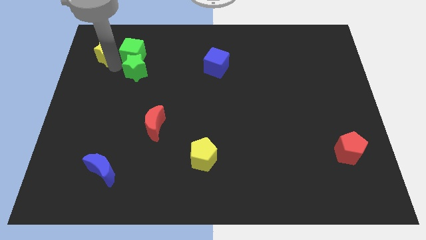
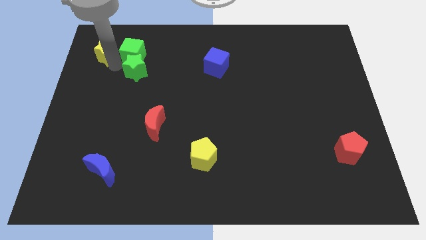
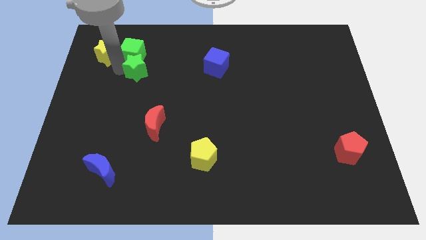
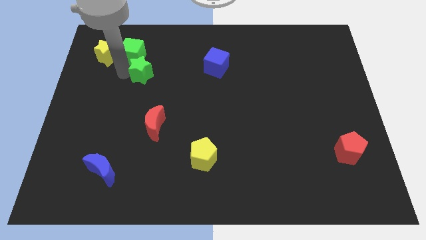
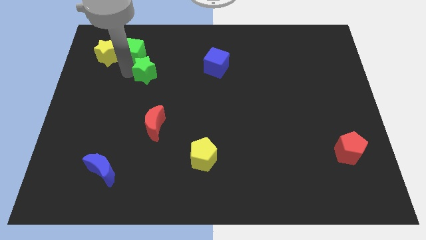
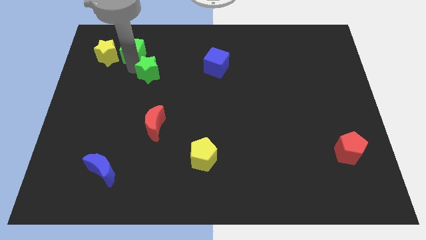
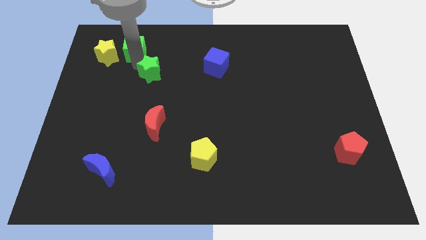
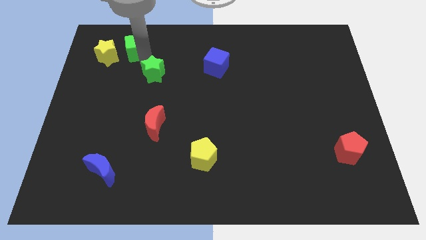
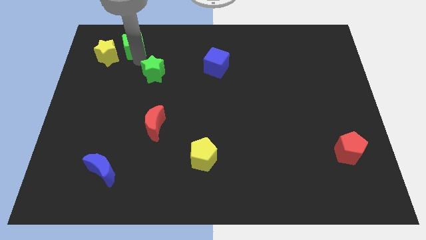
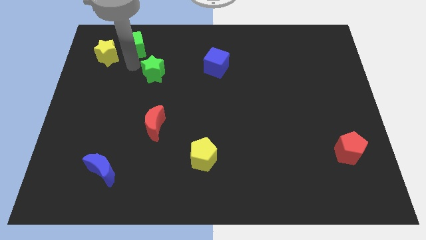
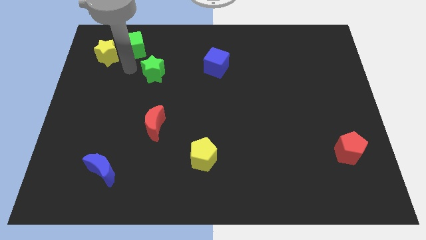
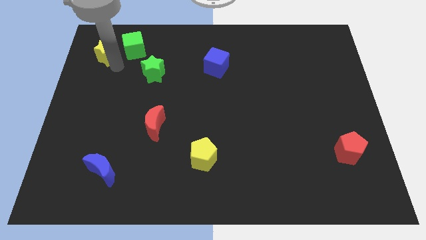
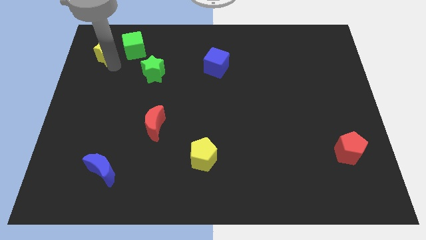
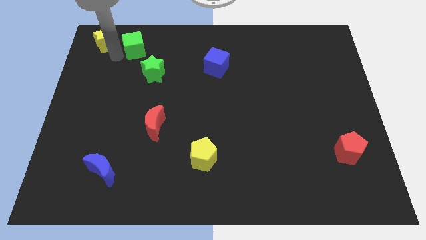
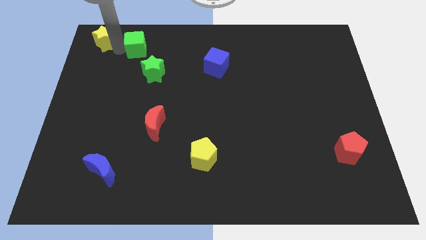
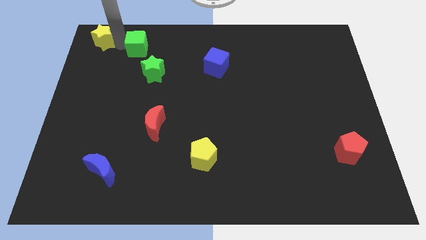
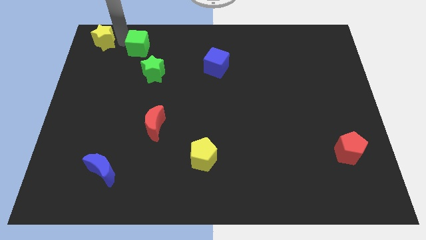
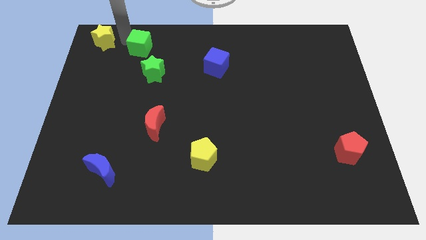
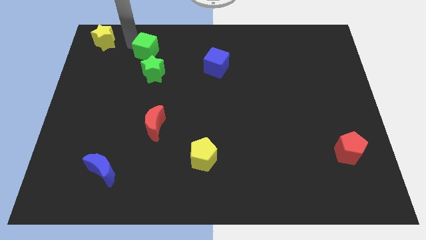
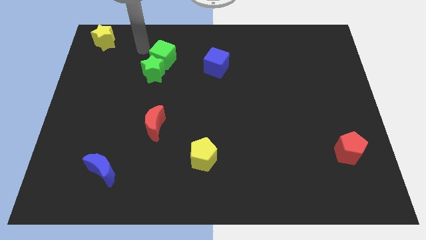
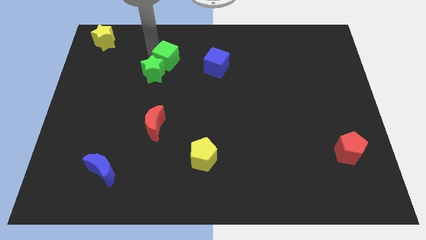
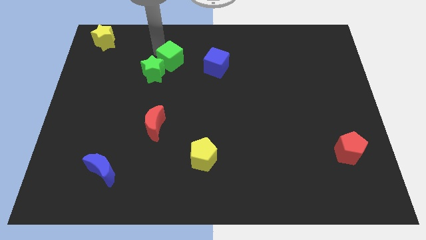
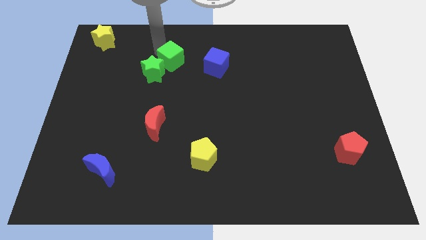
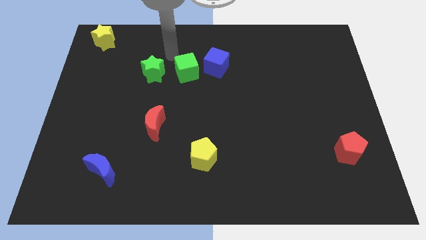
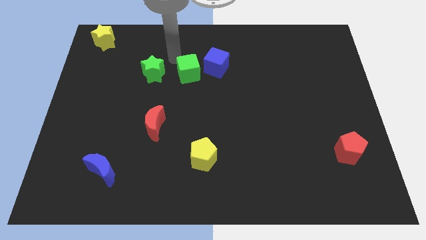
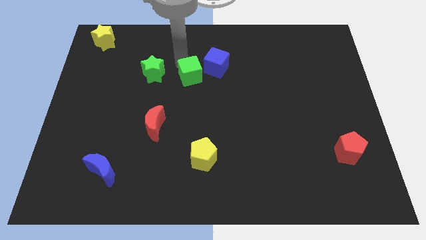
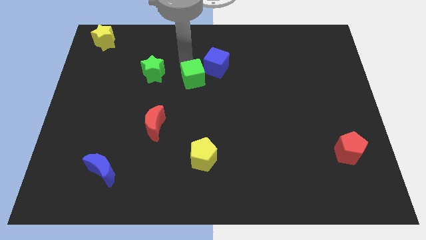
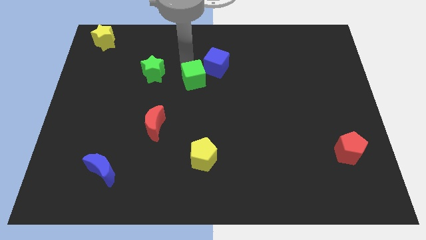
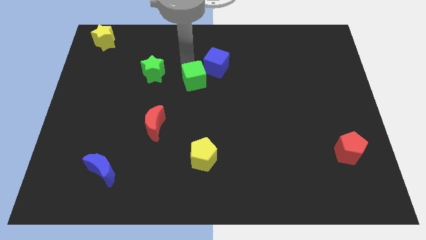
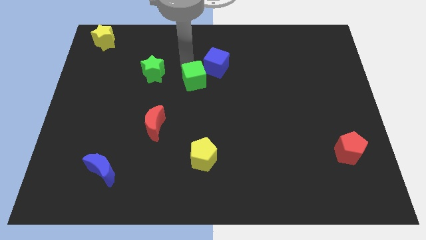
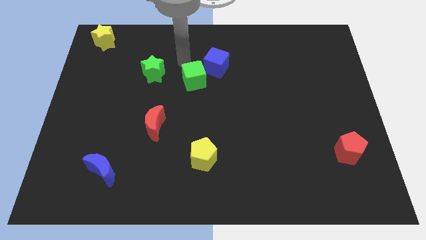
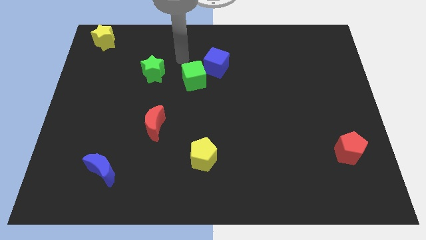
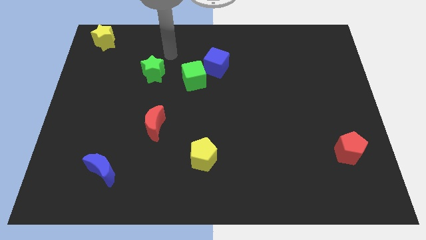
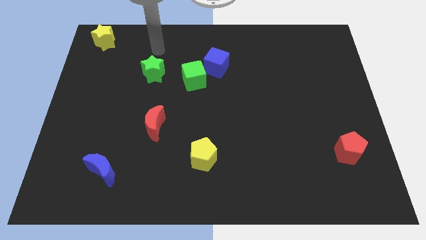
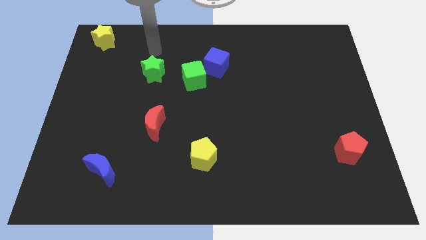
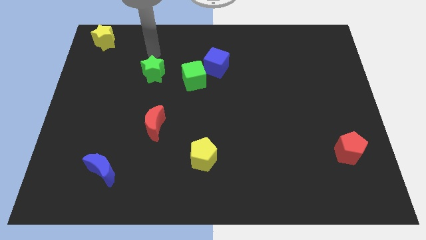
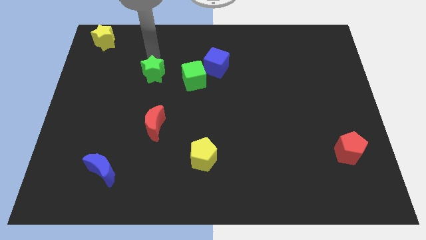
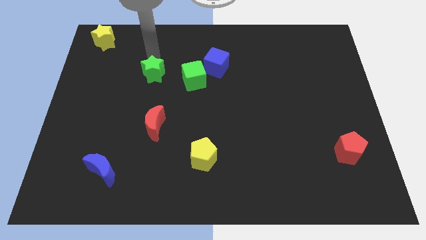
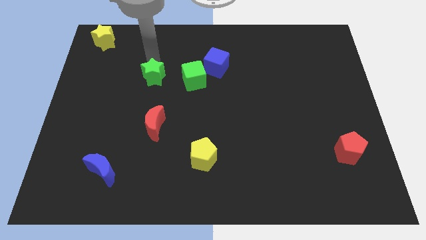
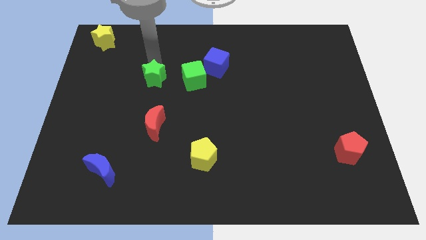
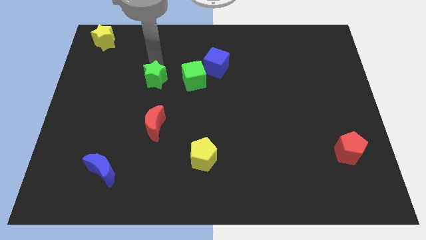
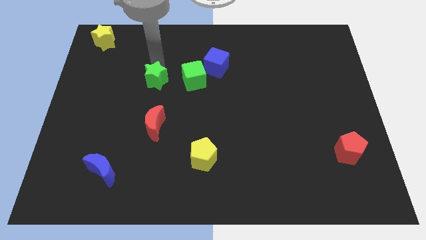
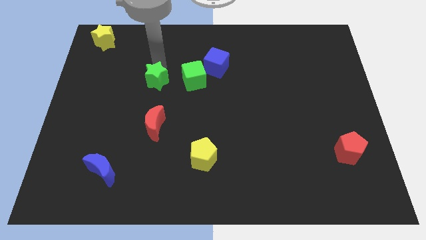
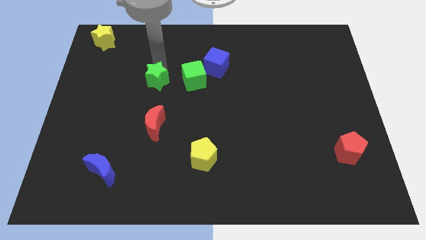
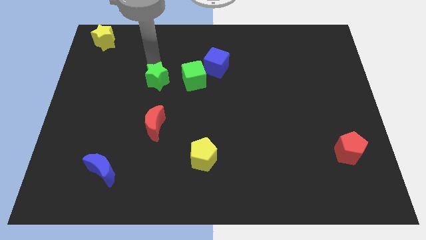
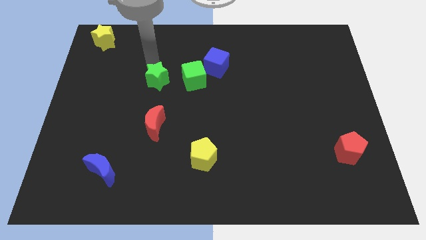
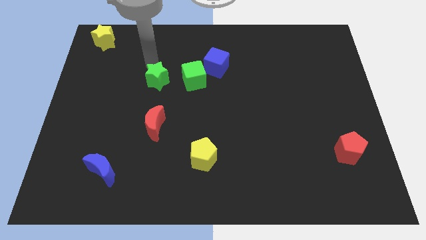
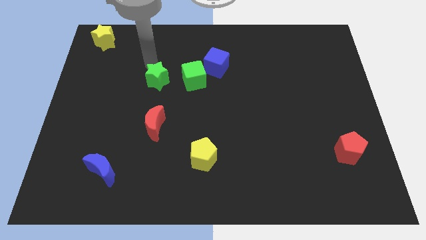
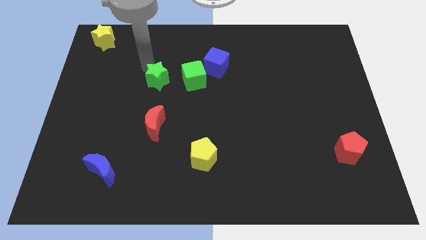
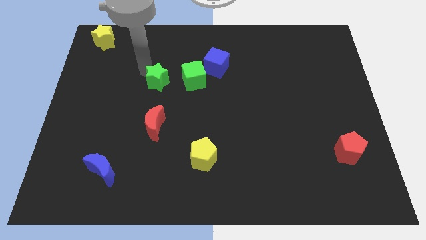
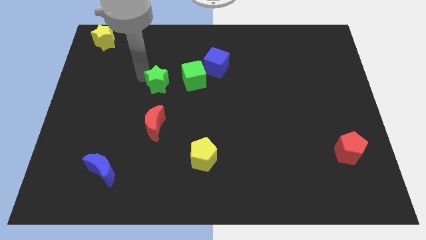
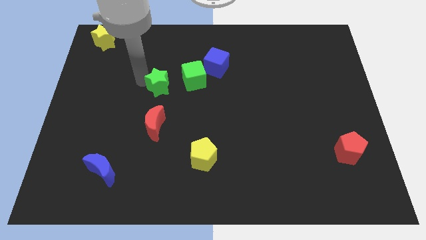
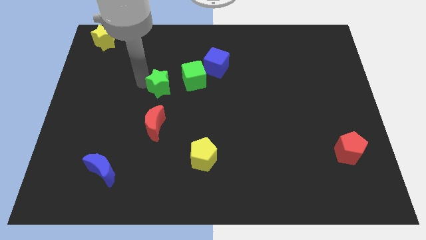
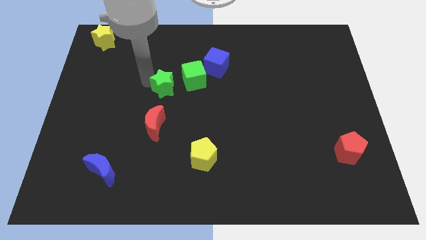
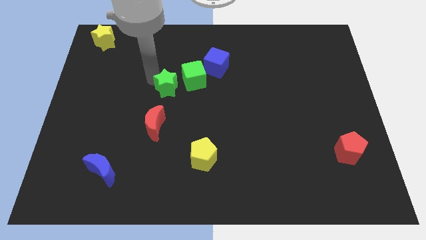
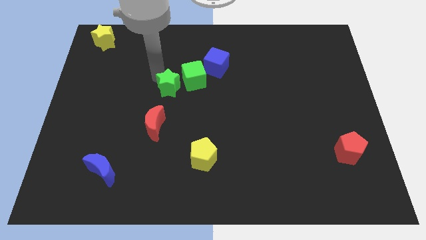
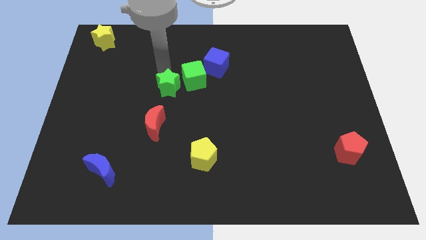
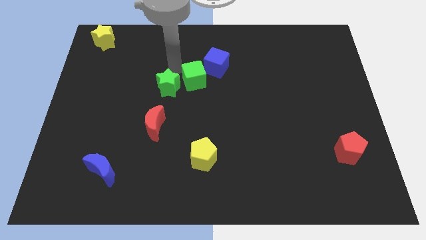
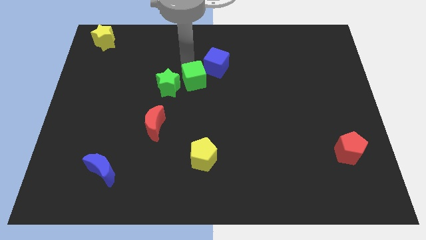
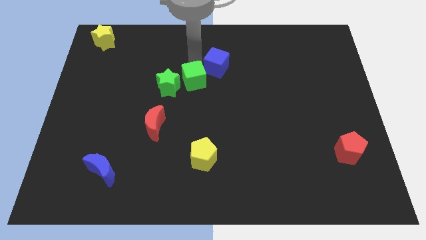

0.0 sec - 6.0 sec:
push green blocks to the bottom left of the blue cube

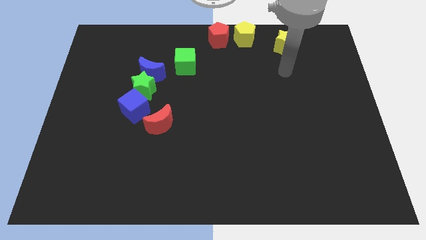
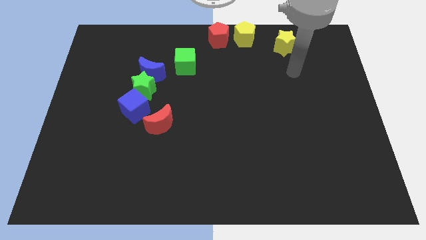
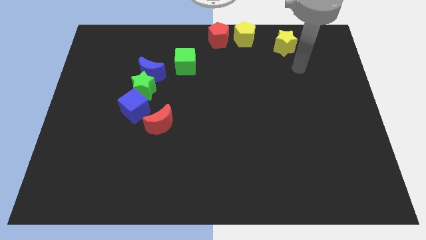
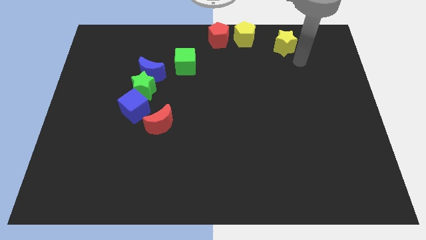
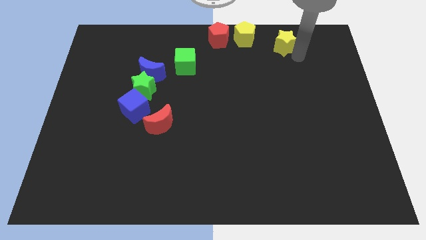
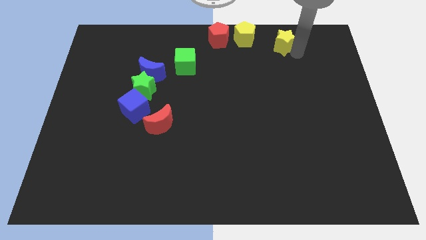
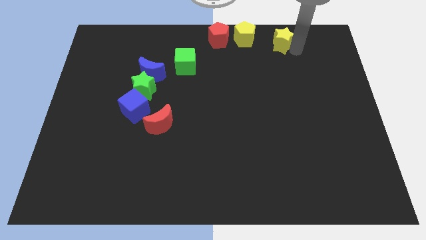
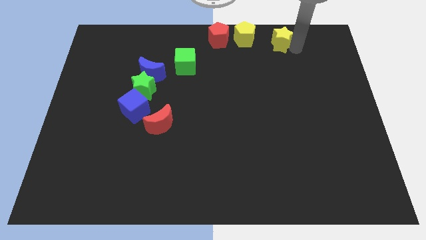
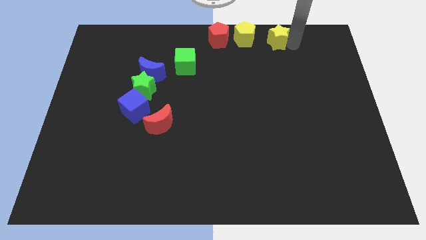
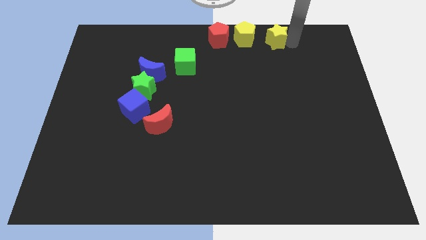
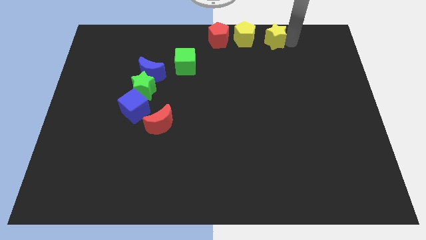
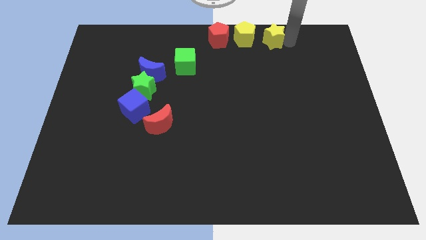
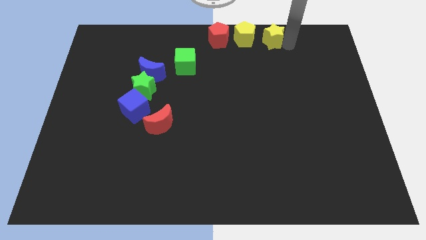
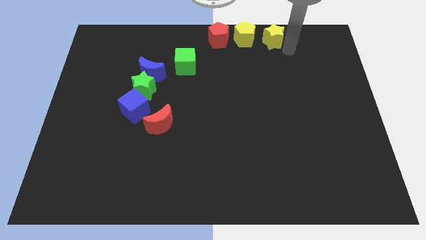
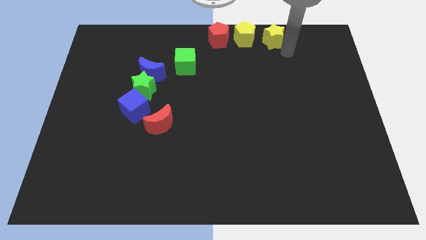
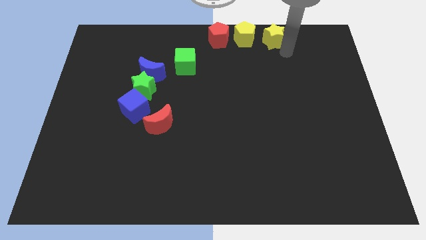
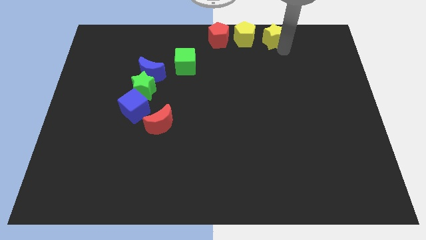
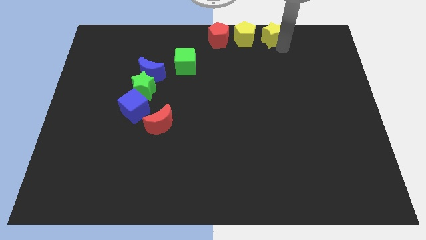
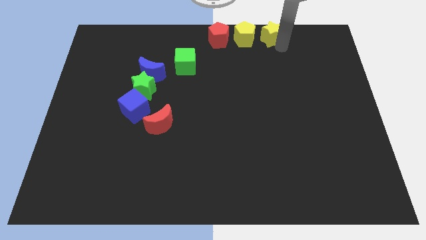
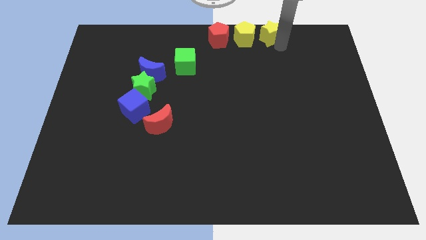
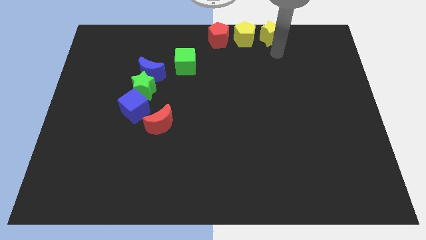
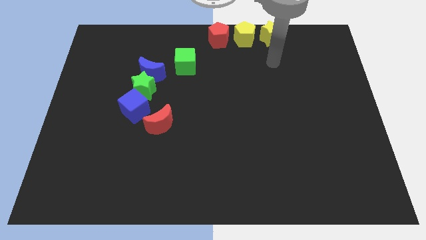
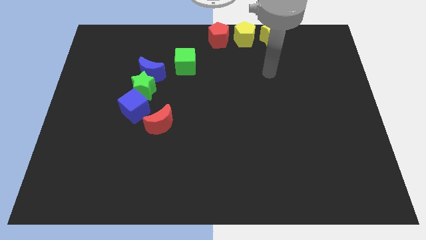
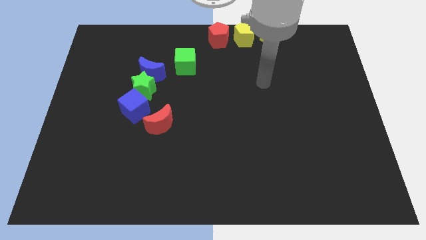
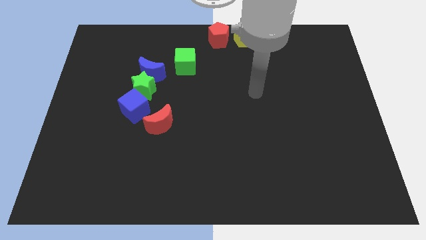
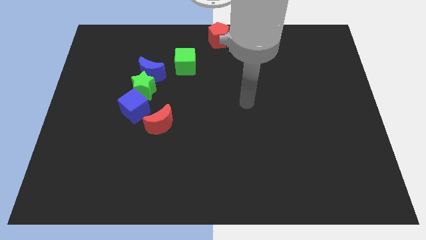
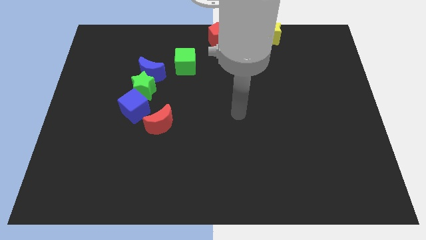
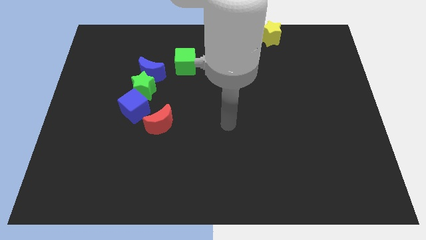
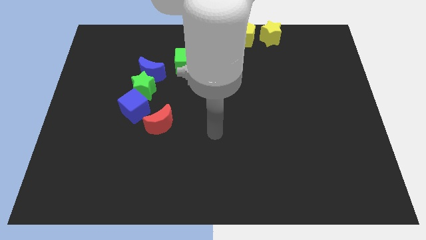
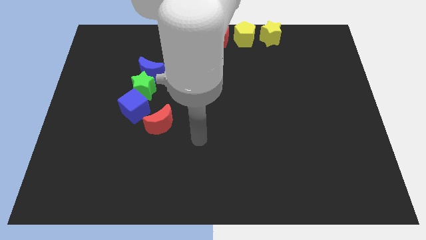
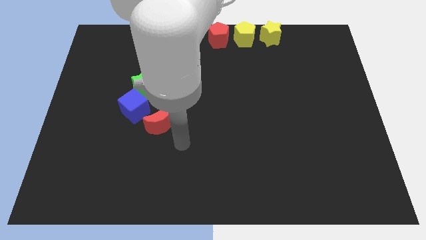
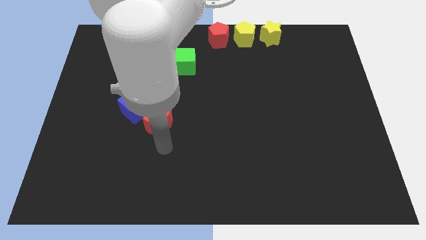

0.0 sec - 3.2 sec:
move the yellow star to the right side of the yellow pentagon

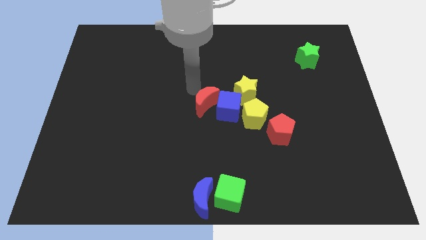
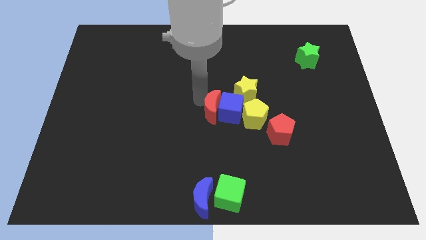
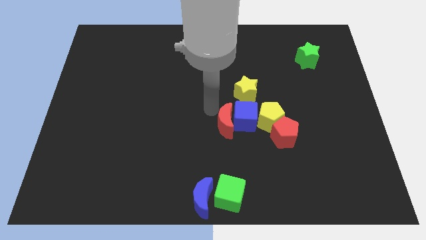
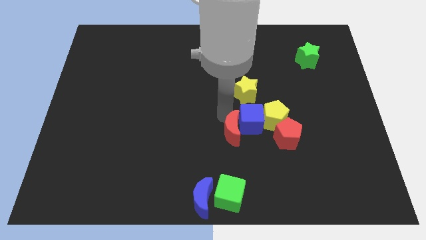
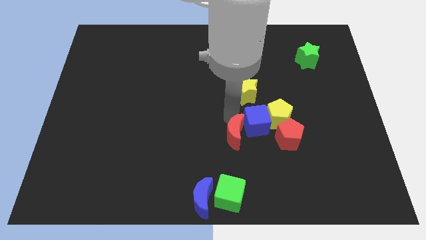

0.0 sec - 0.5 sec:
push the red crescent into the group of blocks
